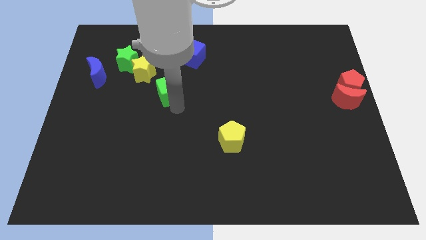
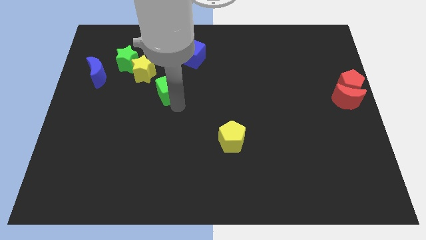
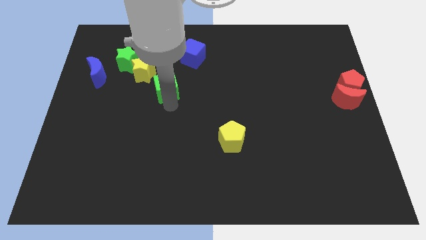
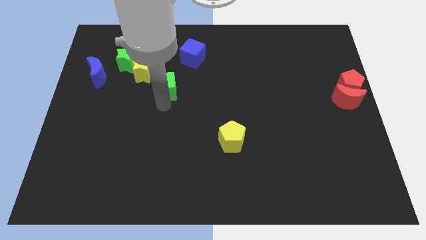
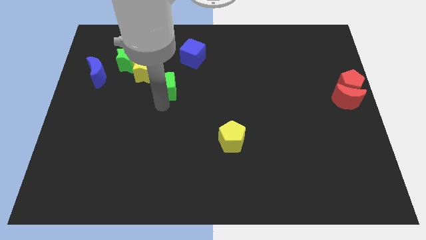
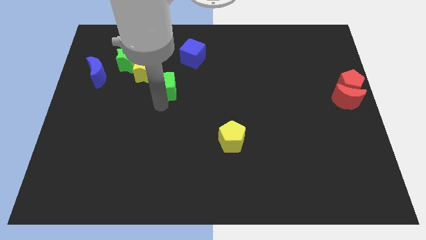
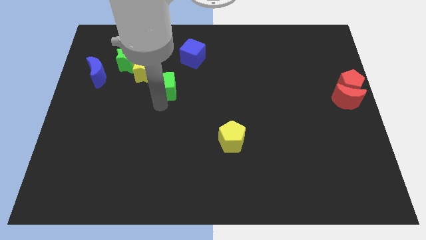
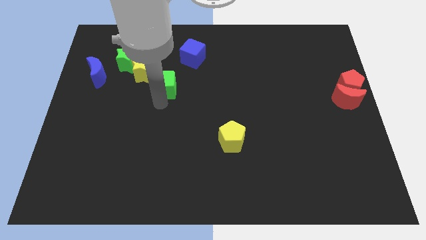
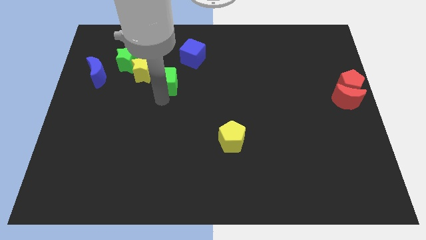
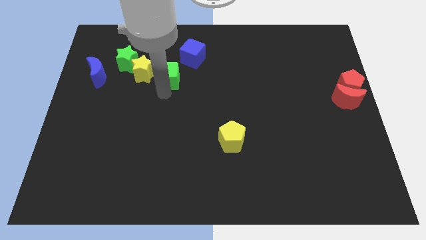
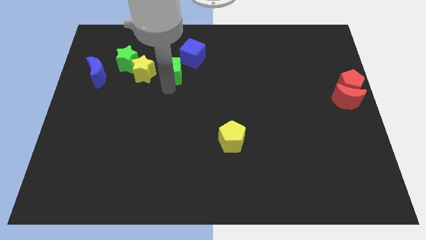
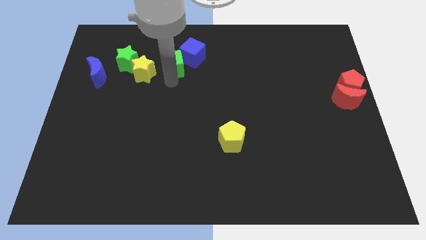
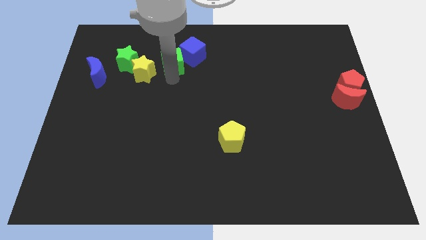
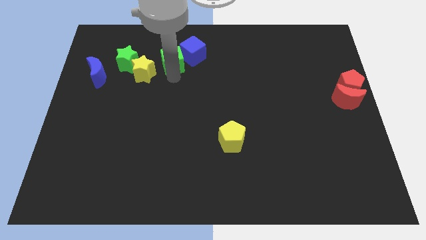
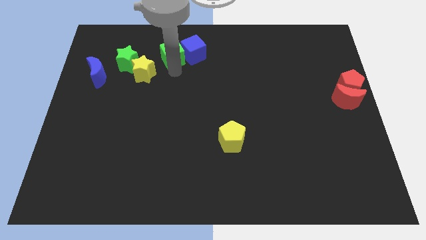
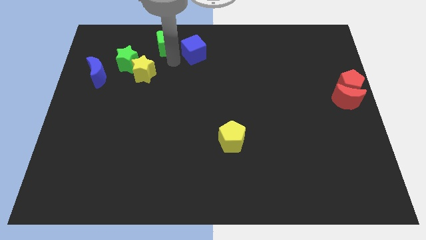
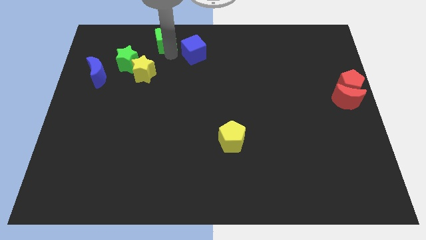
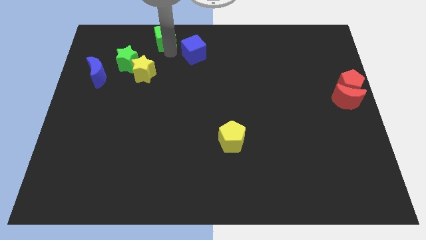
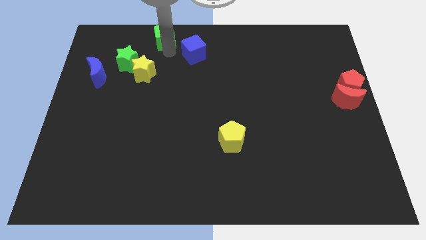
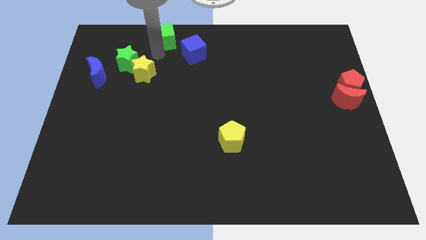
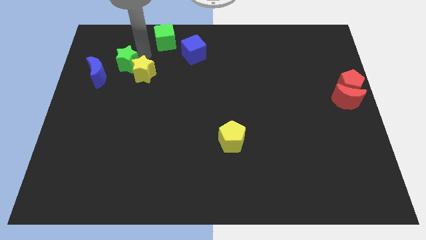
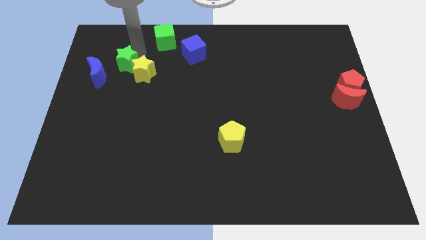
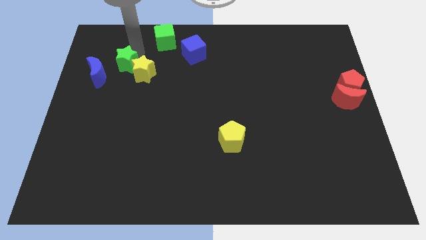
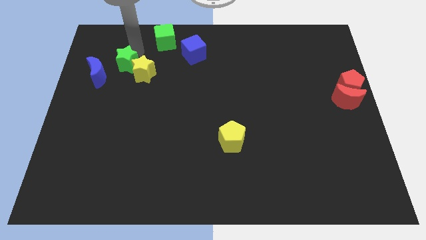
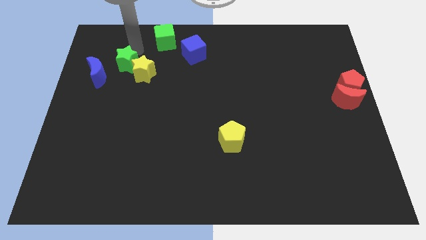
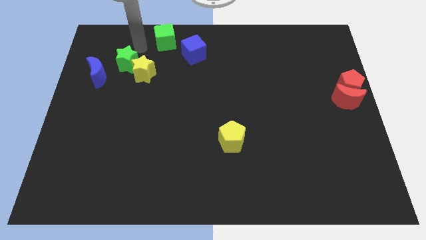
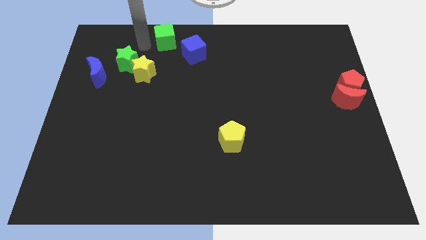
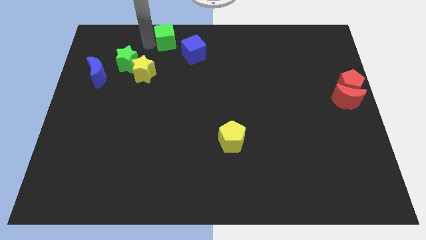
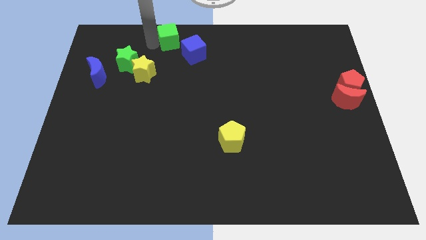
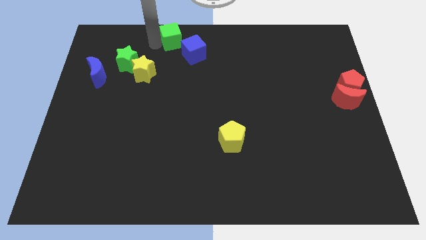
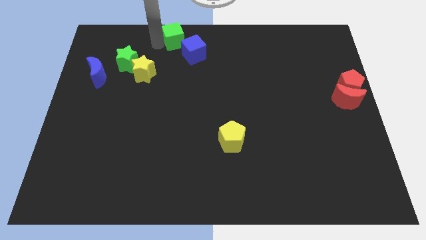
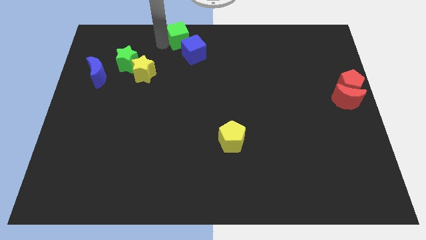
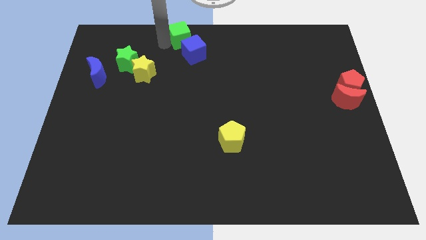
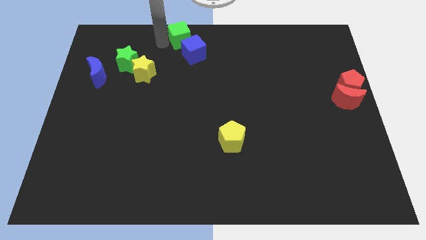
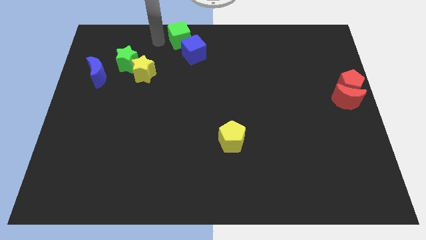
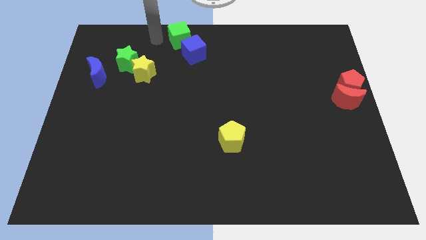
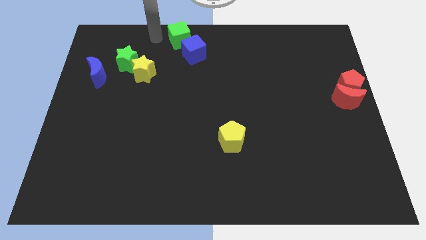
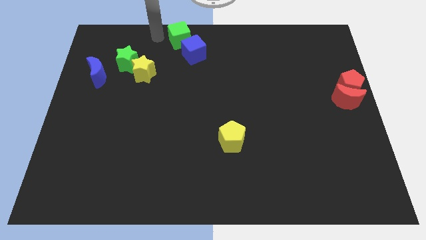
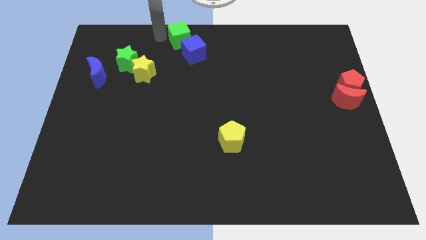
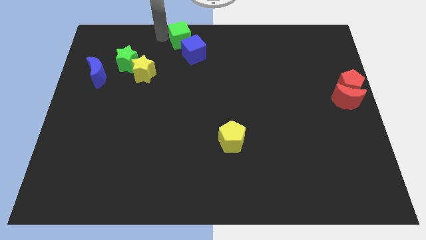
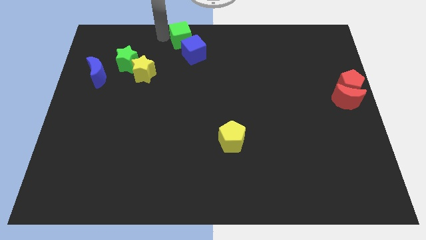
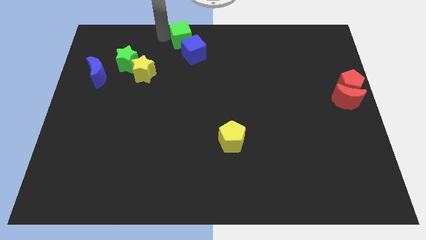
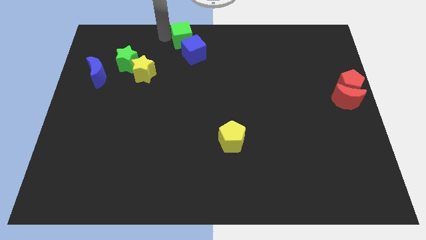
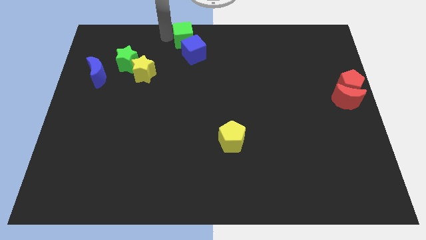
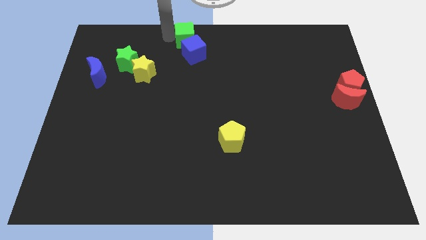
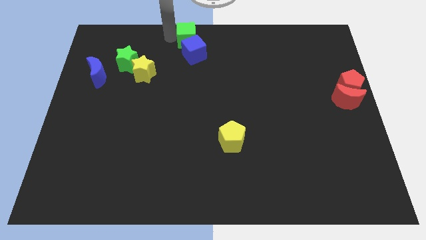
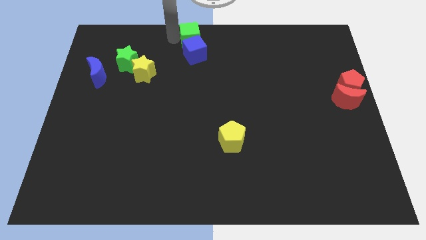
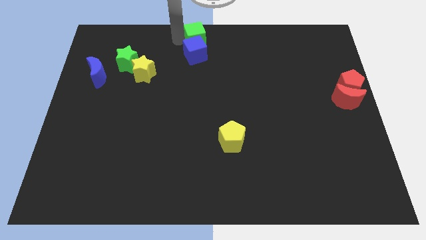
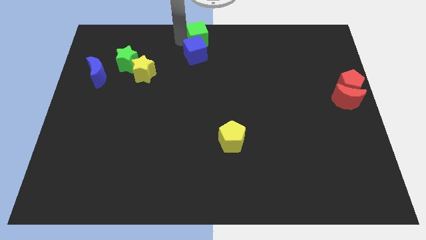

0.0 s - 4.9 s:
move the green cube to the top of the blue cube

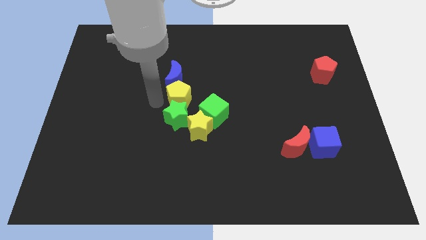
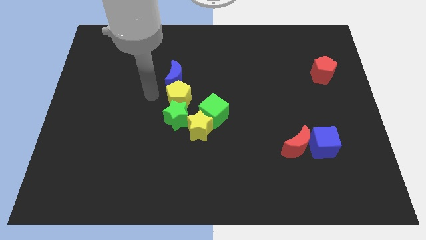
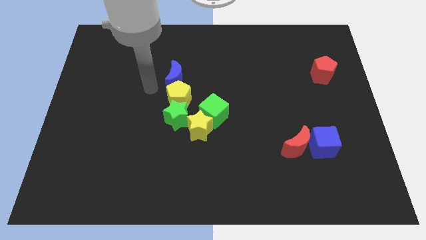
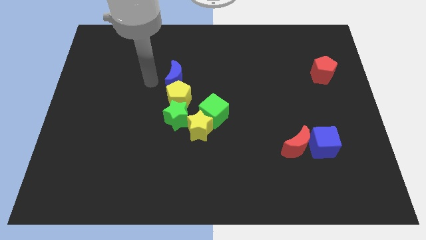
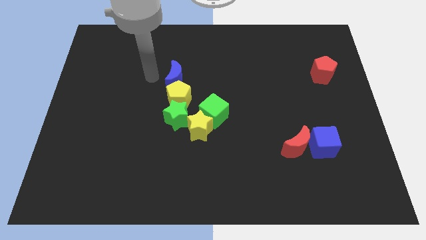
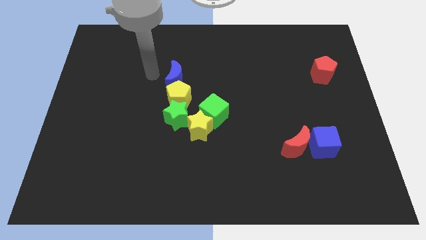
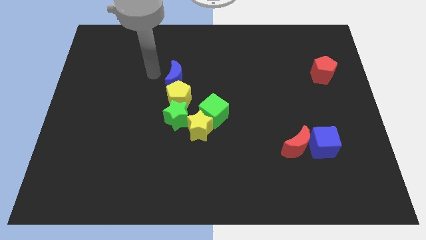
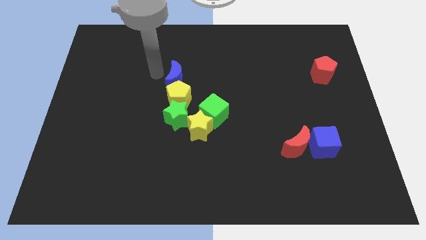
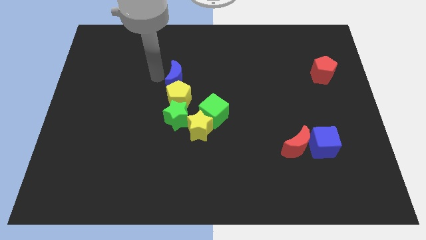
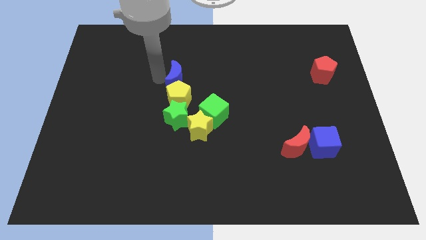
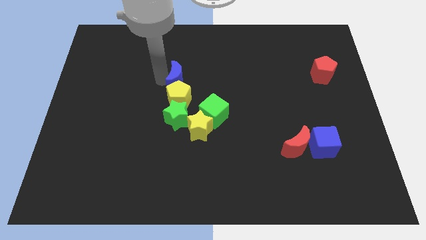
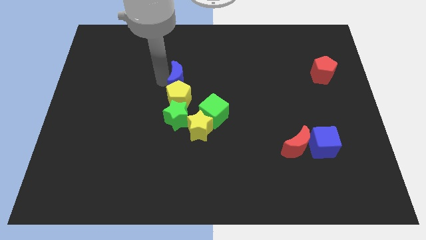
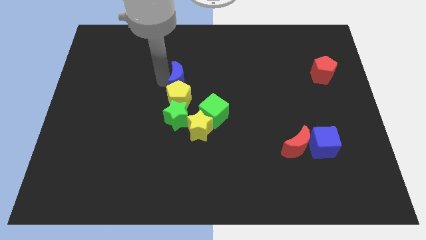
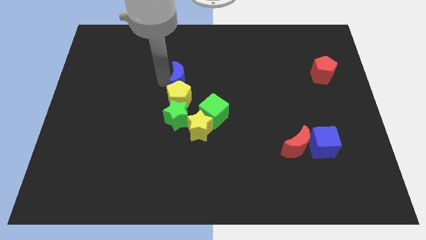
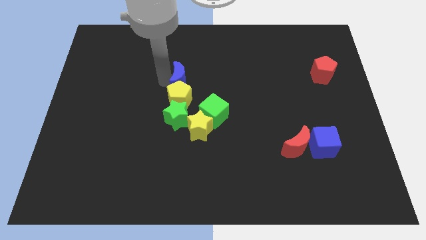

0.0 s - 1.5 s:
move the blue crescent above to the yellow pentagon

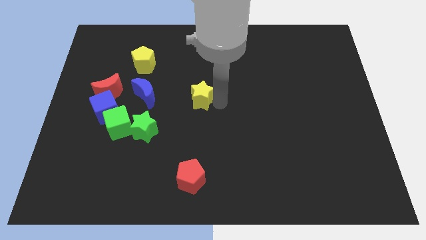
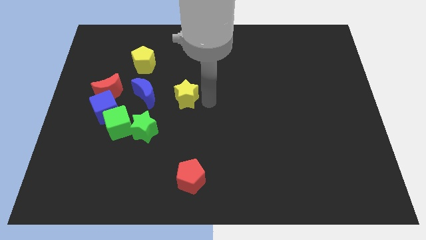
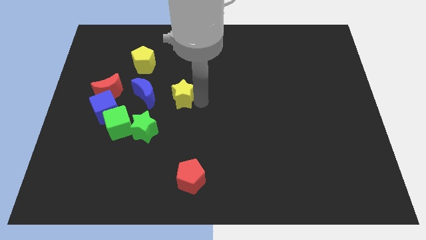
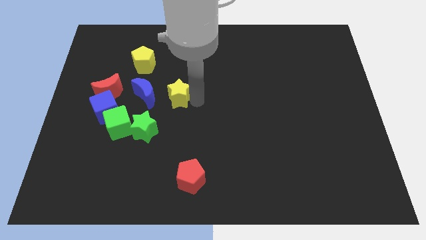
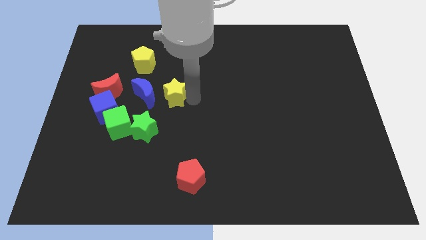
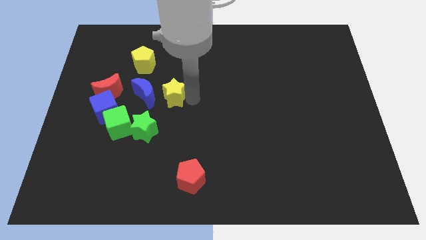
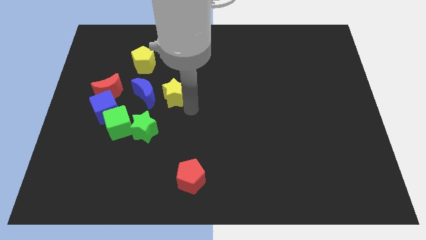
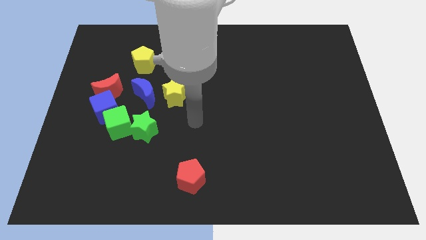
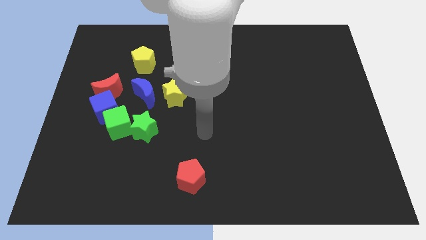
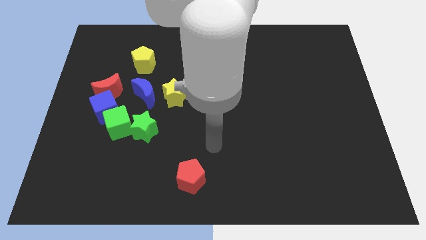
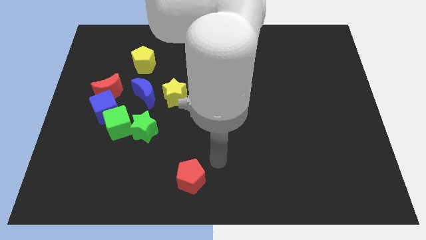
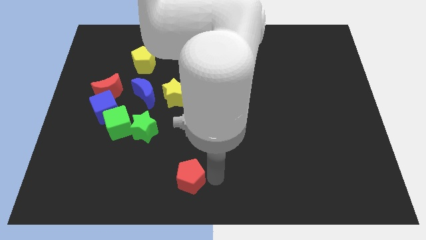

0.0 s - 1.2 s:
move the yellow star to the right of the blue crescent

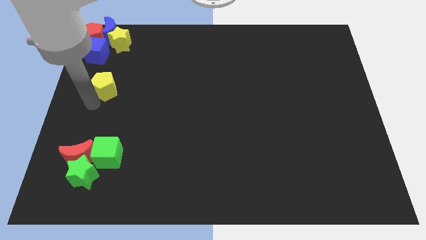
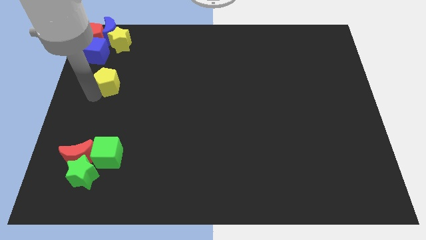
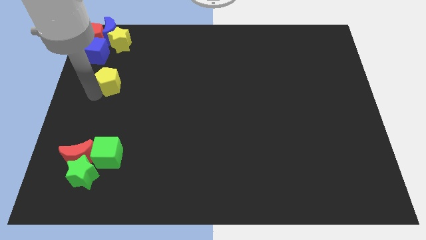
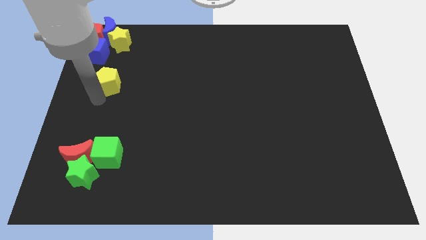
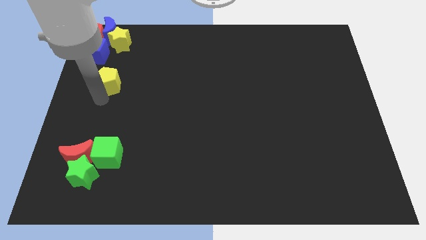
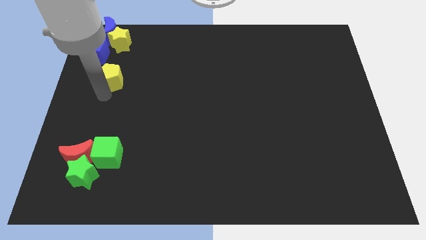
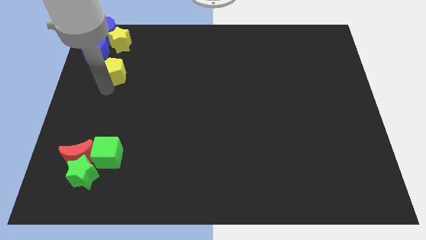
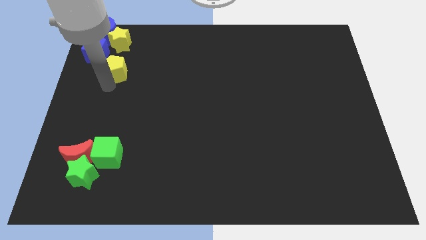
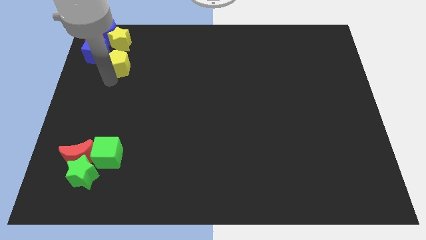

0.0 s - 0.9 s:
push the yellow pentagon to the bottom of the yellow star

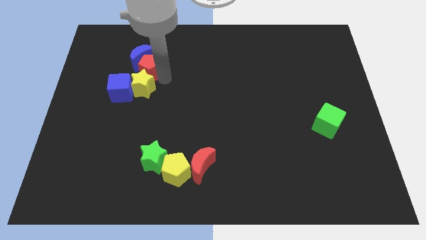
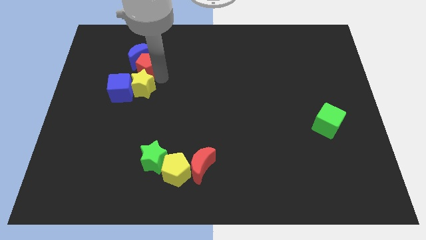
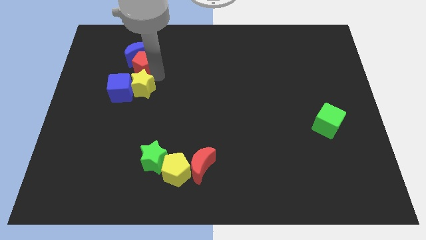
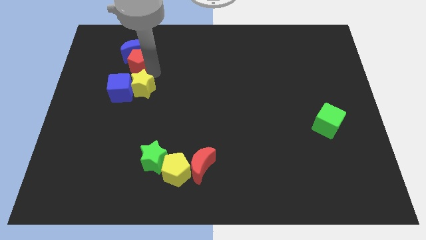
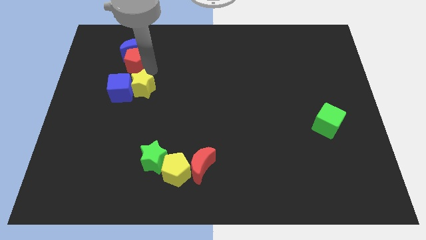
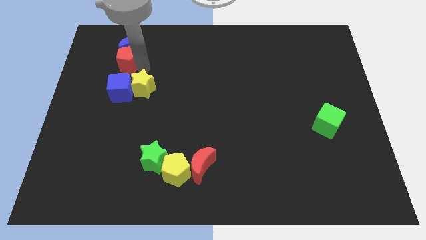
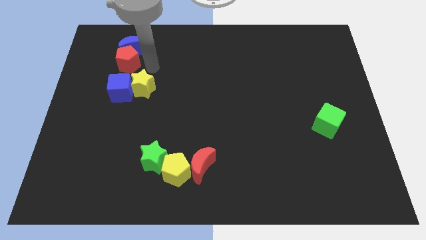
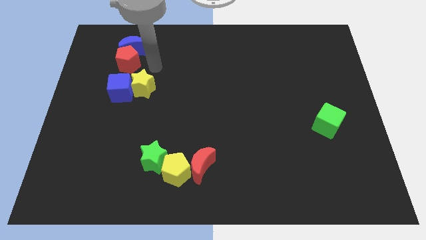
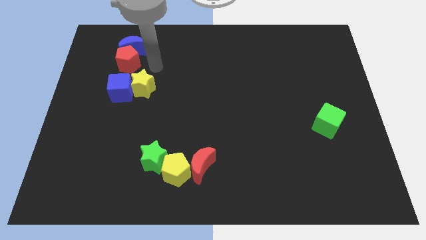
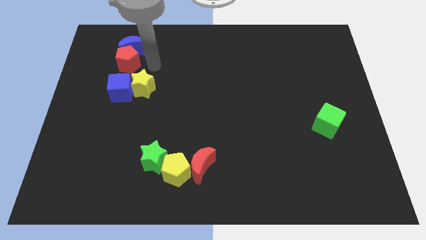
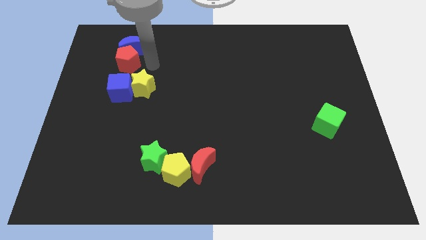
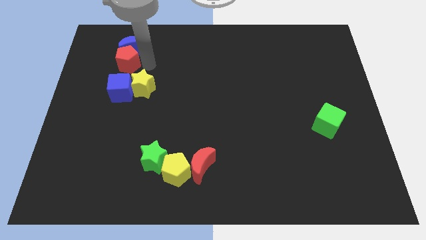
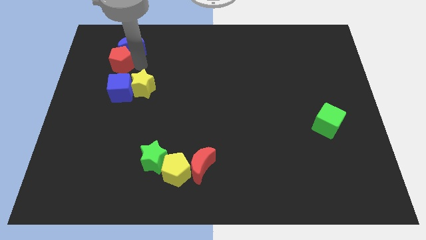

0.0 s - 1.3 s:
place red pentagon to the top of blue cube
